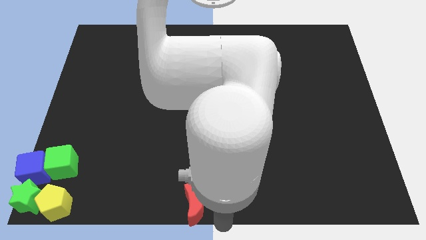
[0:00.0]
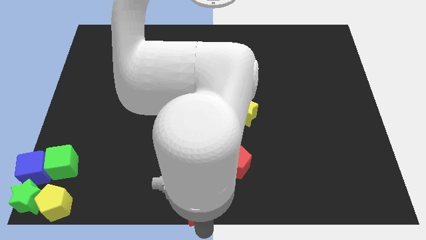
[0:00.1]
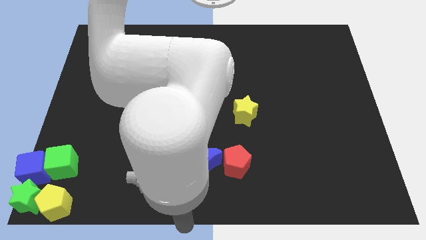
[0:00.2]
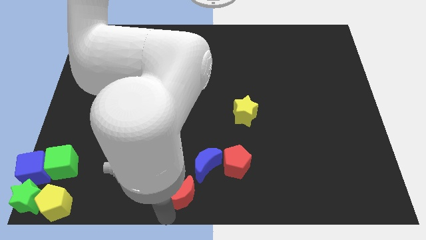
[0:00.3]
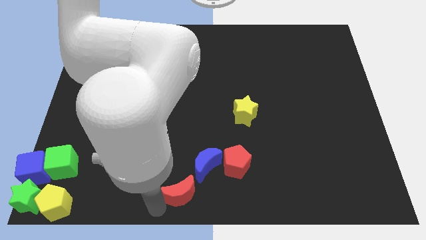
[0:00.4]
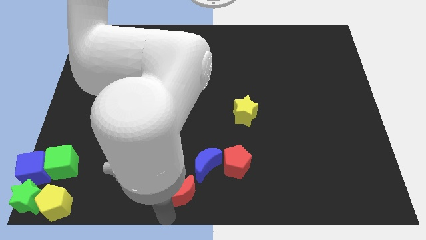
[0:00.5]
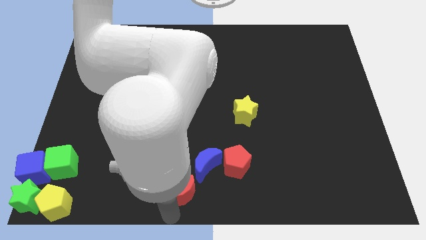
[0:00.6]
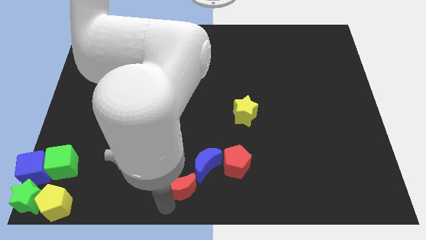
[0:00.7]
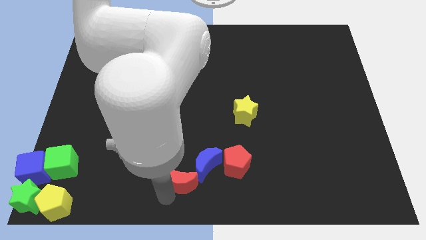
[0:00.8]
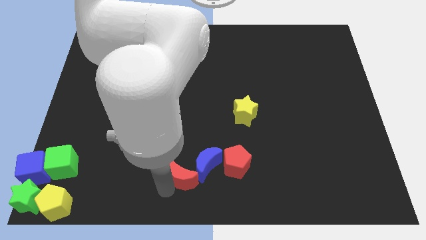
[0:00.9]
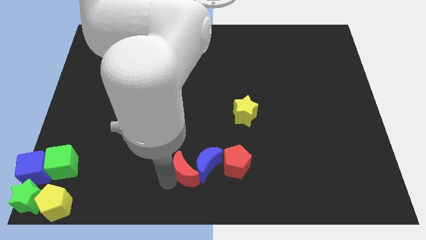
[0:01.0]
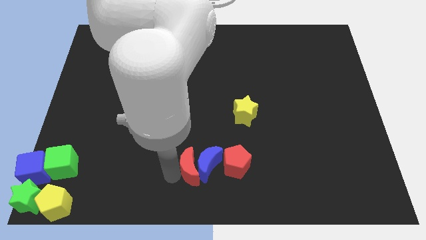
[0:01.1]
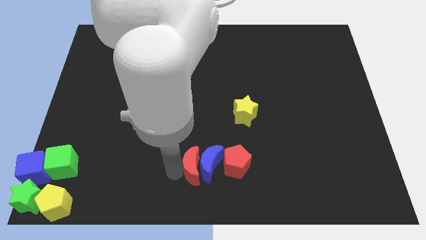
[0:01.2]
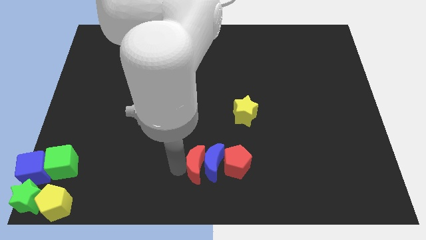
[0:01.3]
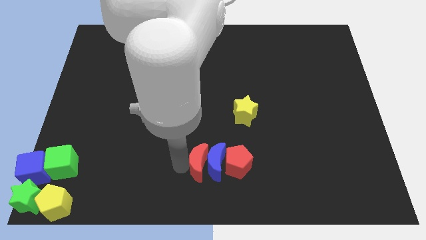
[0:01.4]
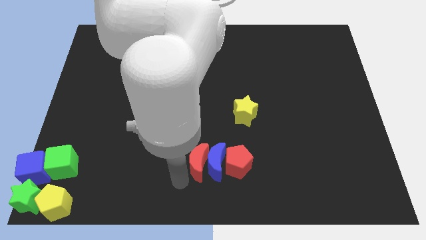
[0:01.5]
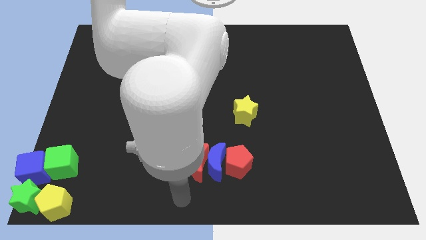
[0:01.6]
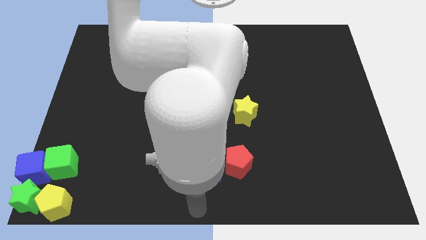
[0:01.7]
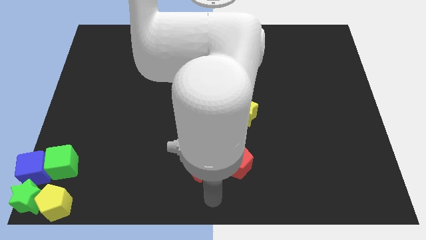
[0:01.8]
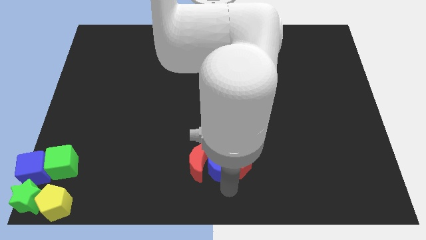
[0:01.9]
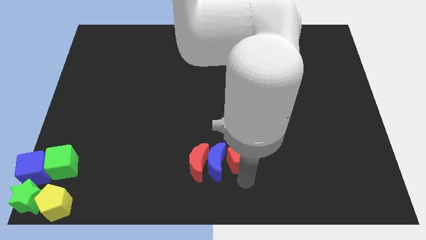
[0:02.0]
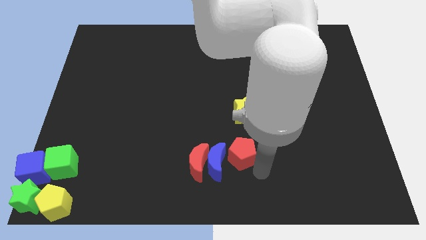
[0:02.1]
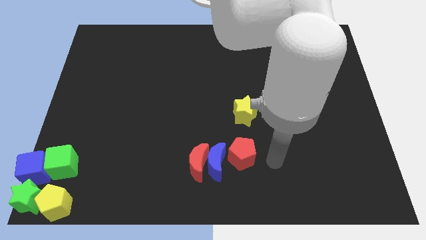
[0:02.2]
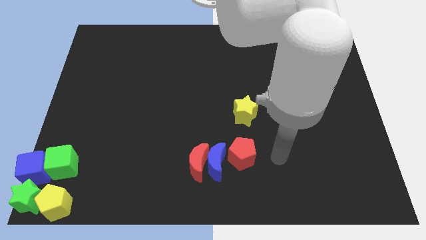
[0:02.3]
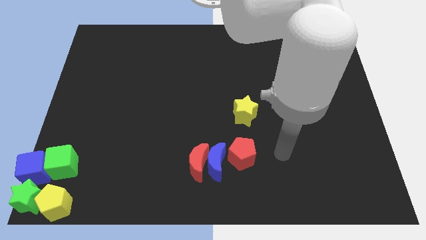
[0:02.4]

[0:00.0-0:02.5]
push the red pentagon towards the left side of the blue moon

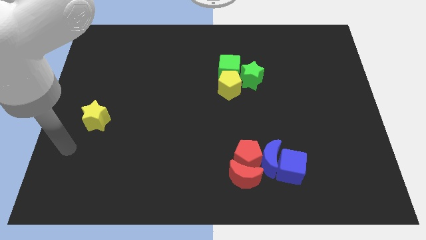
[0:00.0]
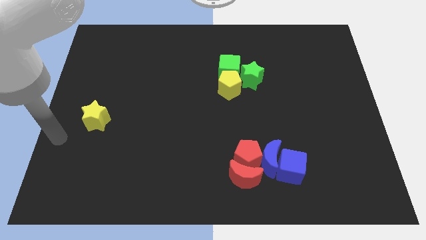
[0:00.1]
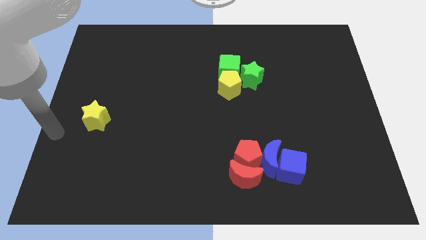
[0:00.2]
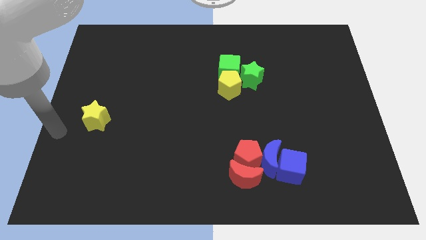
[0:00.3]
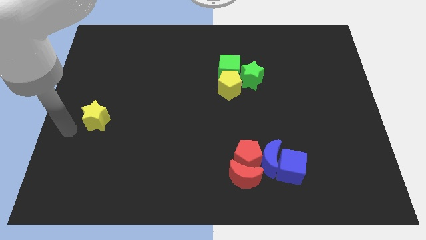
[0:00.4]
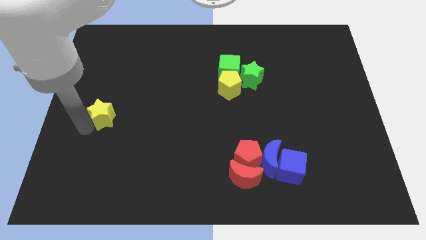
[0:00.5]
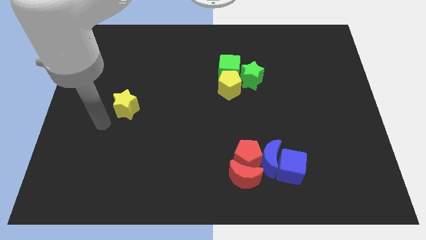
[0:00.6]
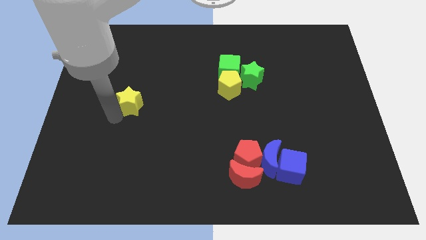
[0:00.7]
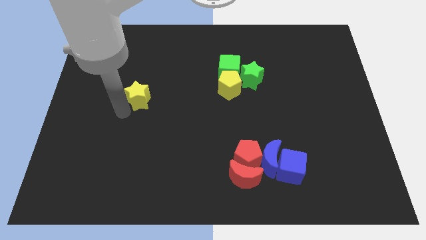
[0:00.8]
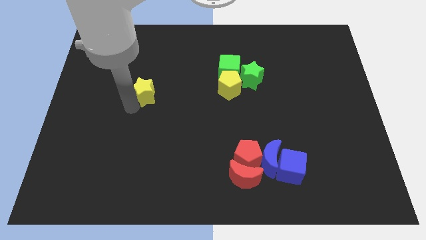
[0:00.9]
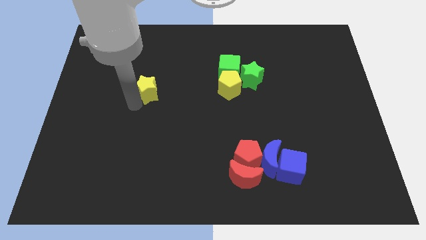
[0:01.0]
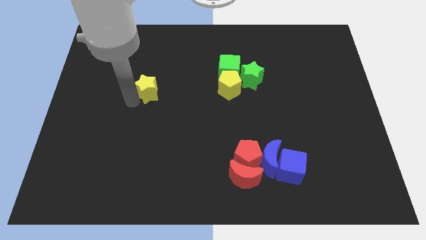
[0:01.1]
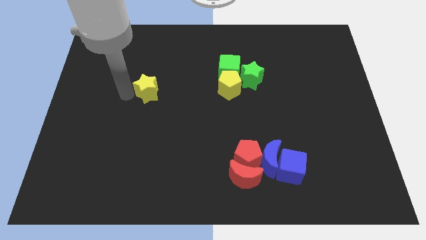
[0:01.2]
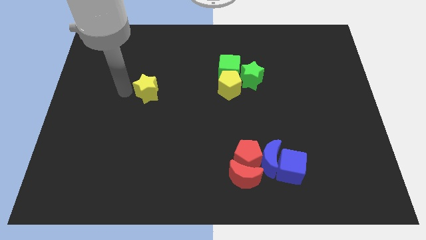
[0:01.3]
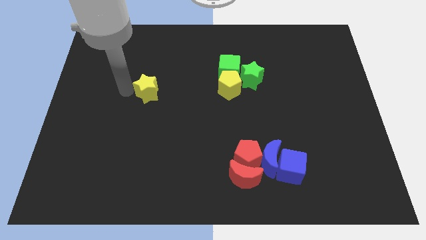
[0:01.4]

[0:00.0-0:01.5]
push the yellow star to the left of the yellow pentagon

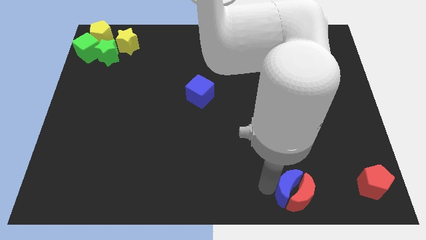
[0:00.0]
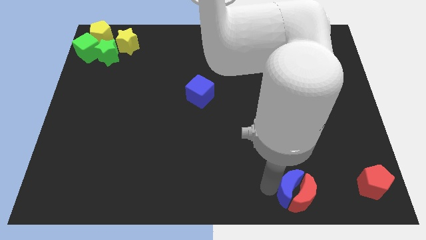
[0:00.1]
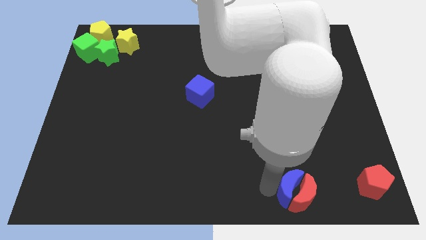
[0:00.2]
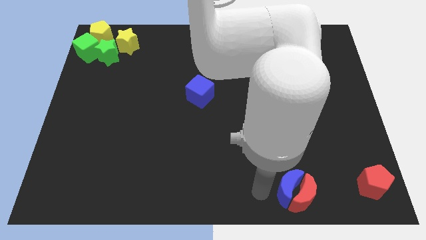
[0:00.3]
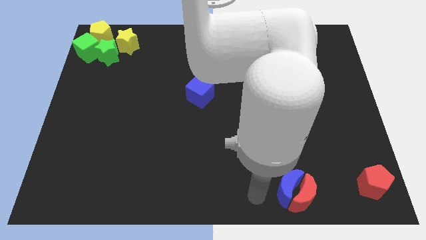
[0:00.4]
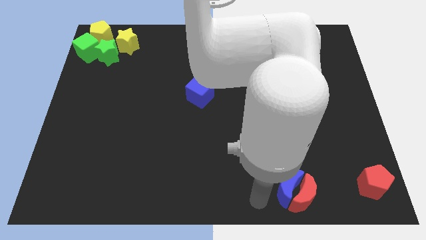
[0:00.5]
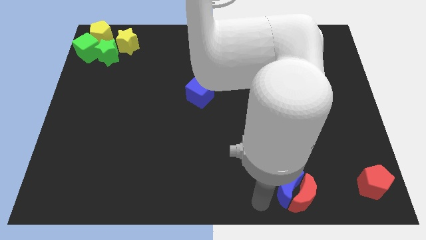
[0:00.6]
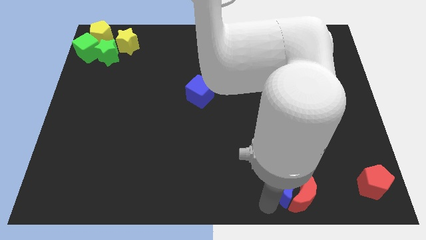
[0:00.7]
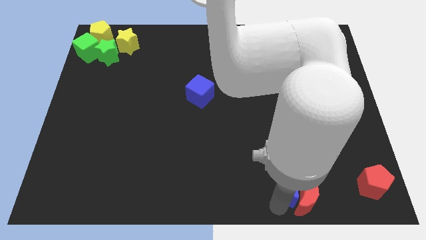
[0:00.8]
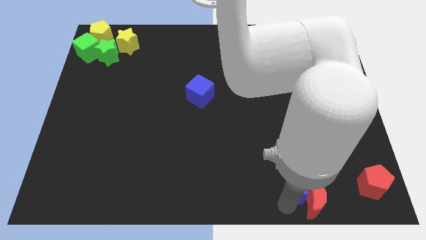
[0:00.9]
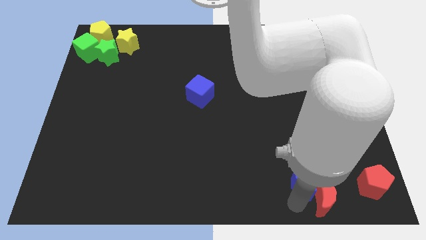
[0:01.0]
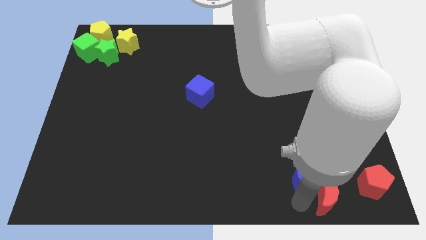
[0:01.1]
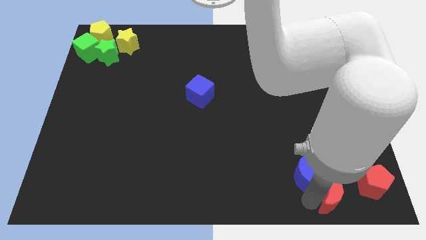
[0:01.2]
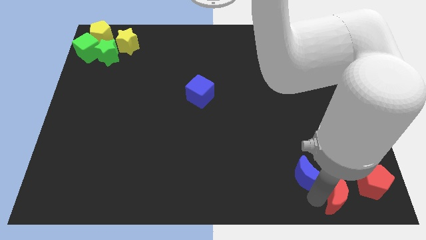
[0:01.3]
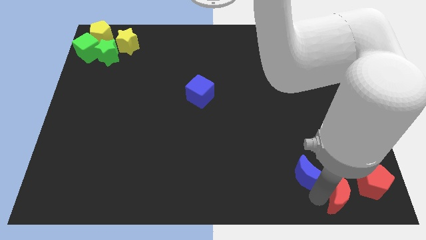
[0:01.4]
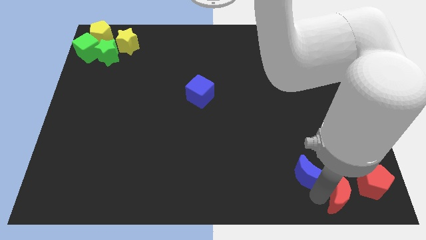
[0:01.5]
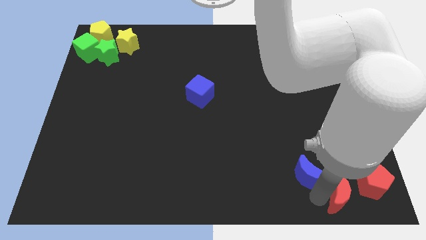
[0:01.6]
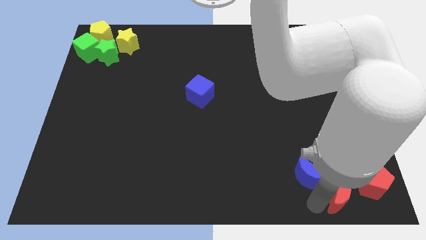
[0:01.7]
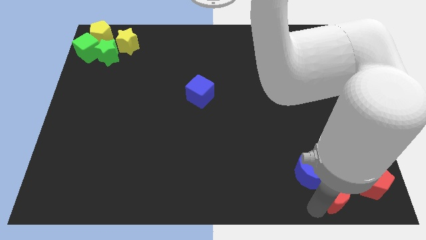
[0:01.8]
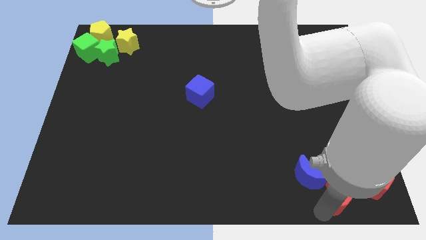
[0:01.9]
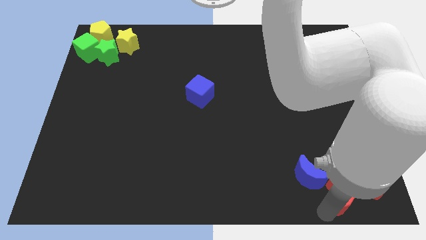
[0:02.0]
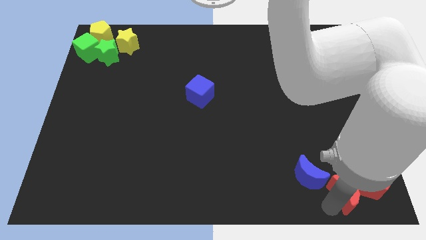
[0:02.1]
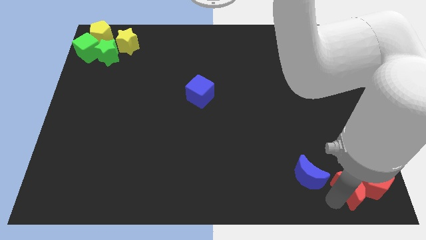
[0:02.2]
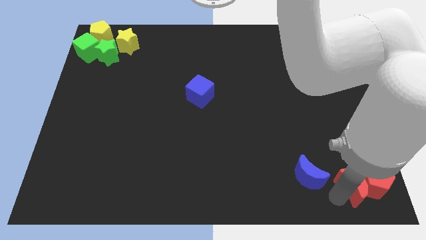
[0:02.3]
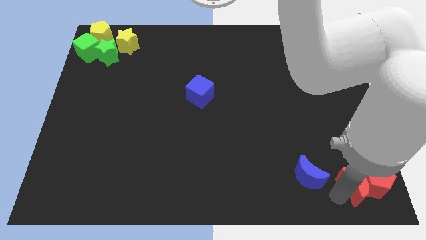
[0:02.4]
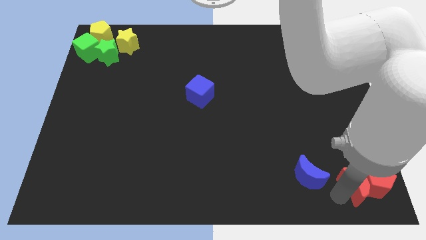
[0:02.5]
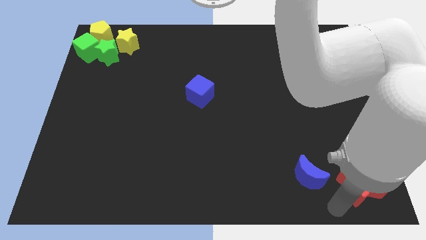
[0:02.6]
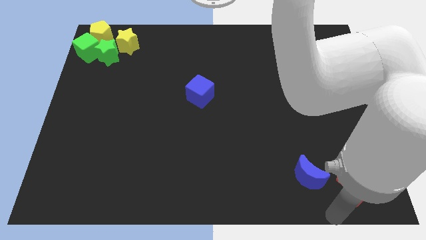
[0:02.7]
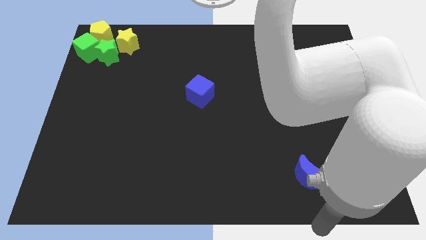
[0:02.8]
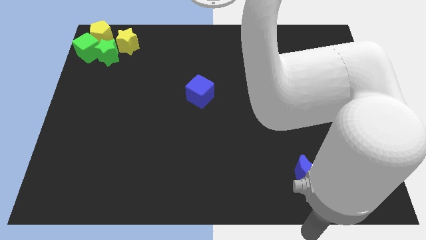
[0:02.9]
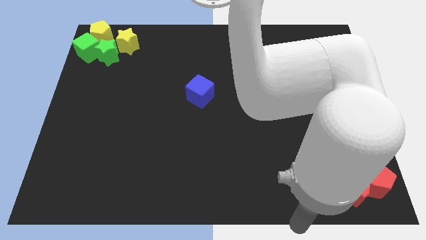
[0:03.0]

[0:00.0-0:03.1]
separate the red moon into the red pentagon at the bottom

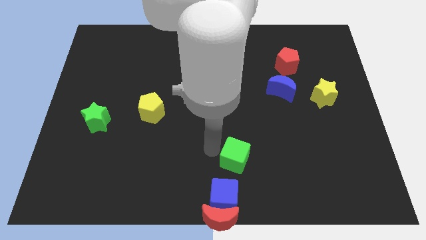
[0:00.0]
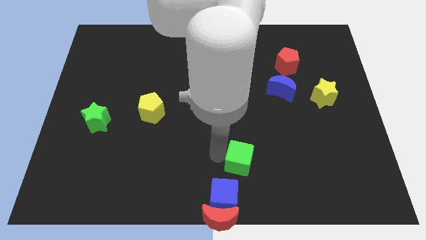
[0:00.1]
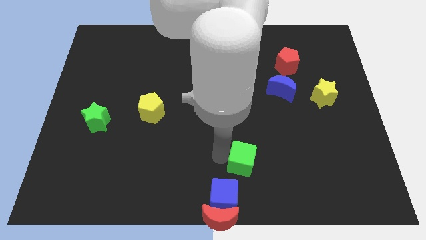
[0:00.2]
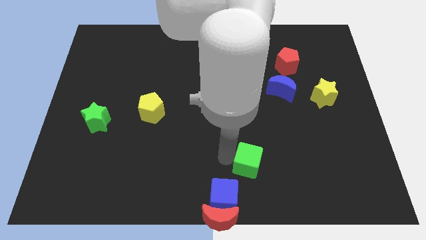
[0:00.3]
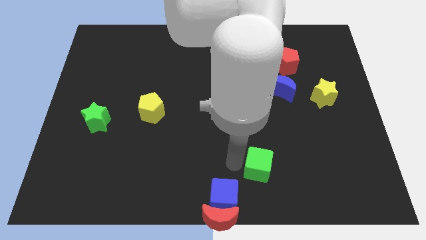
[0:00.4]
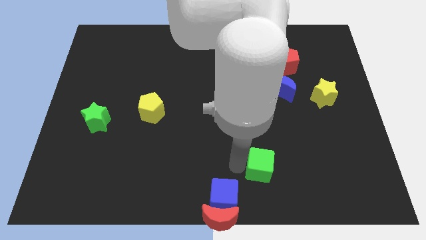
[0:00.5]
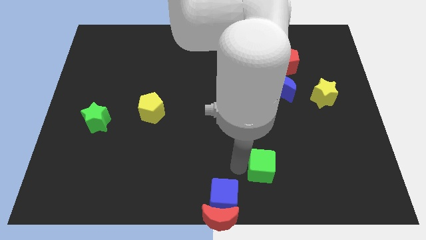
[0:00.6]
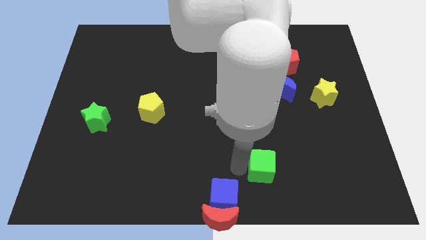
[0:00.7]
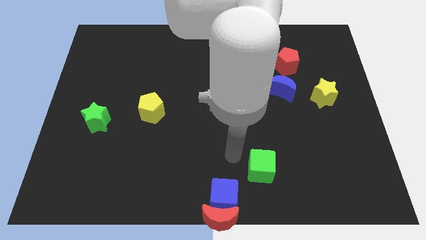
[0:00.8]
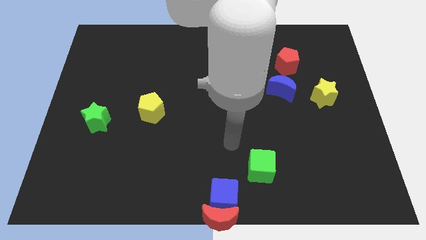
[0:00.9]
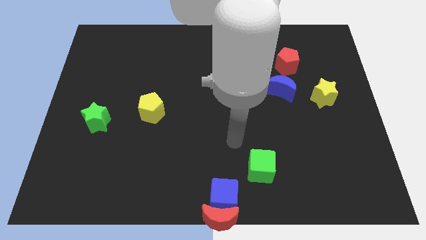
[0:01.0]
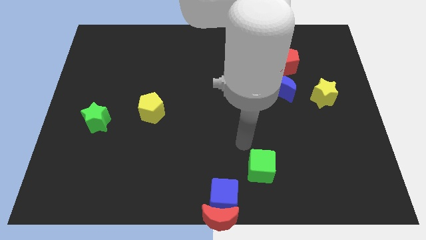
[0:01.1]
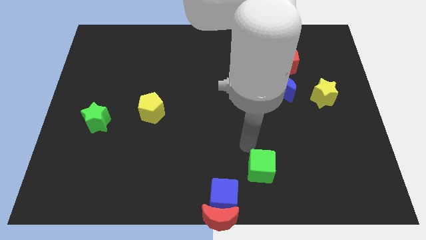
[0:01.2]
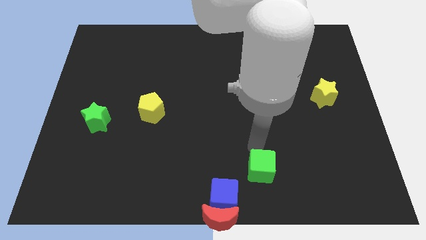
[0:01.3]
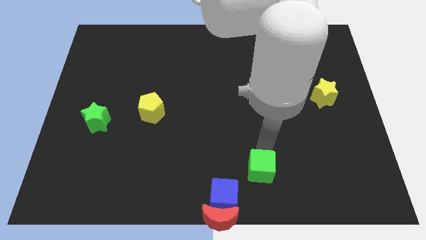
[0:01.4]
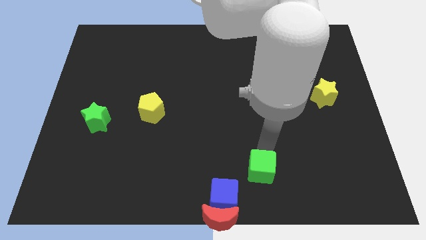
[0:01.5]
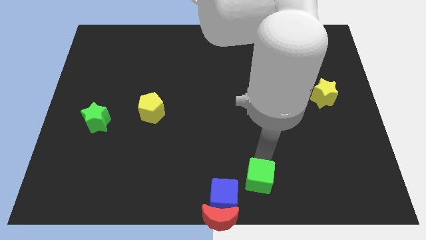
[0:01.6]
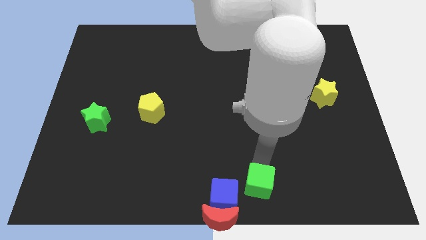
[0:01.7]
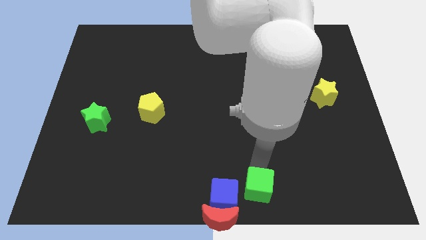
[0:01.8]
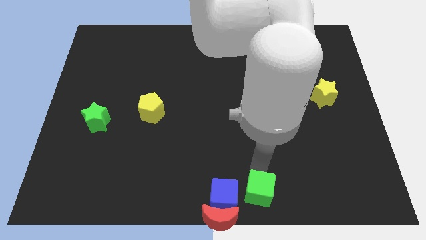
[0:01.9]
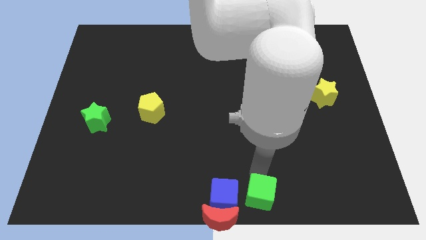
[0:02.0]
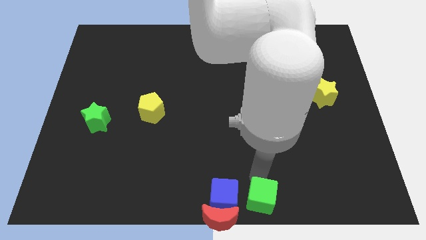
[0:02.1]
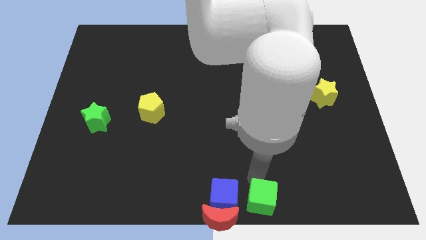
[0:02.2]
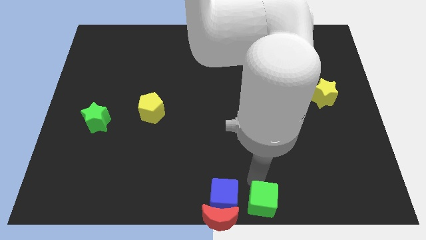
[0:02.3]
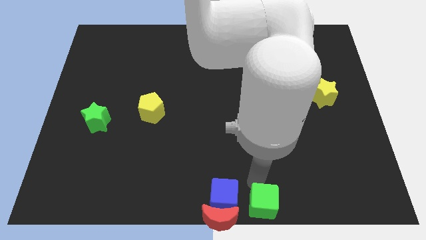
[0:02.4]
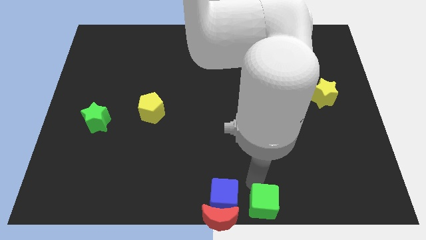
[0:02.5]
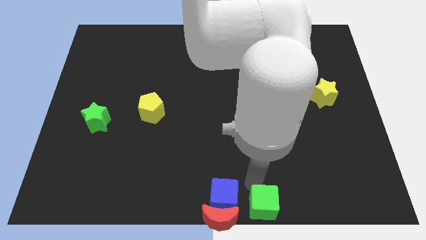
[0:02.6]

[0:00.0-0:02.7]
place the green cube right to the red crescent
